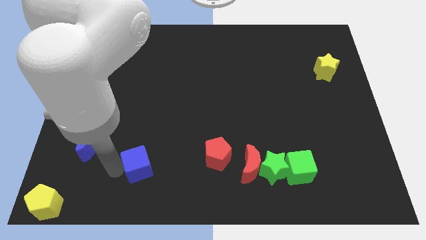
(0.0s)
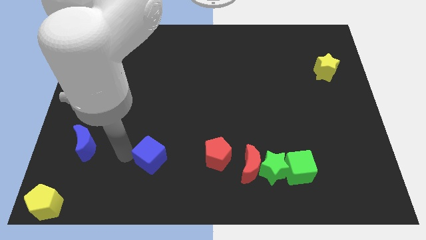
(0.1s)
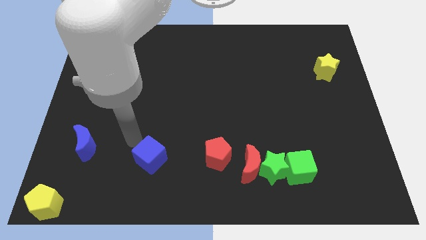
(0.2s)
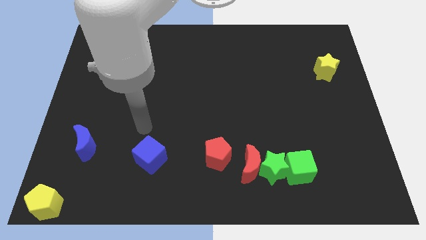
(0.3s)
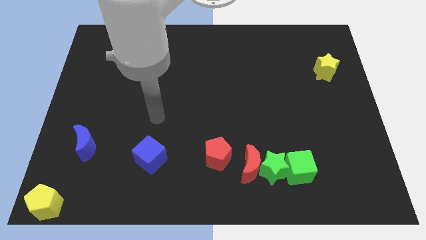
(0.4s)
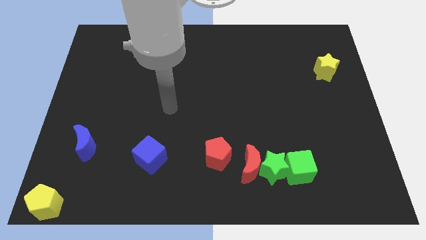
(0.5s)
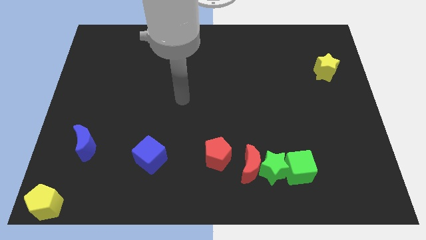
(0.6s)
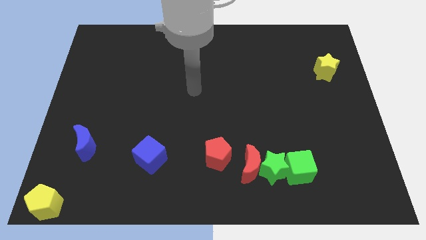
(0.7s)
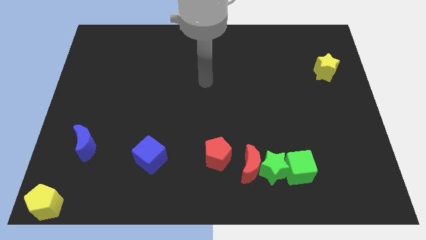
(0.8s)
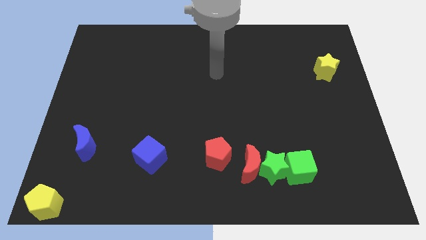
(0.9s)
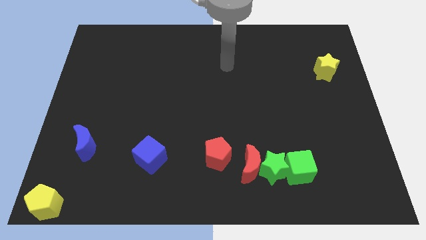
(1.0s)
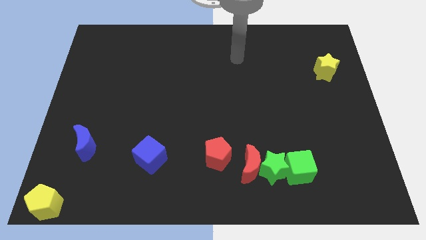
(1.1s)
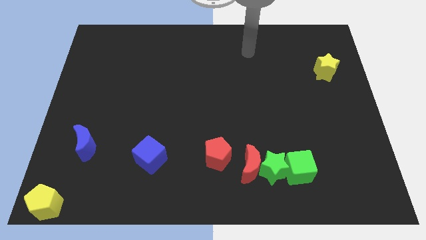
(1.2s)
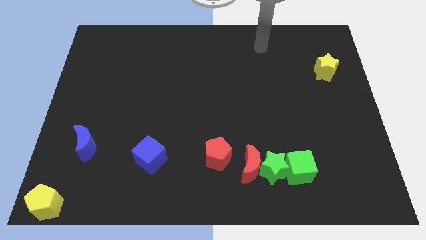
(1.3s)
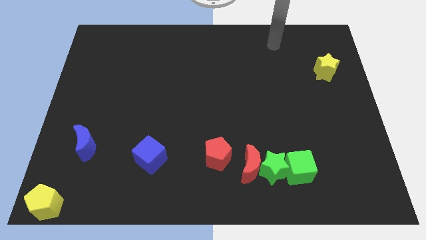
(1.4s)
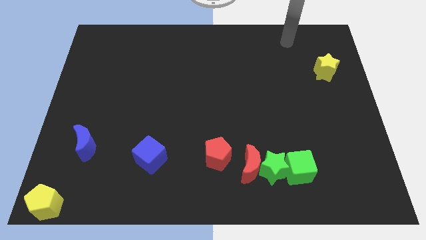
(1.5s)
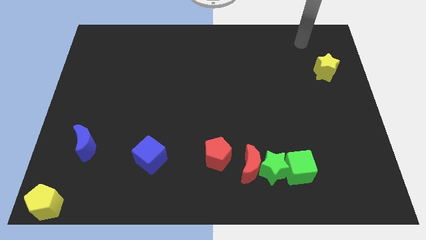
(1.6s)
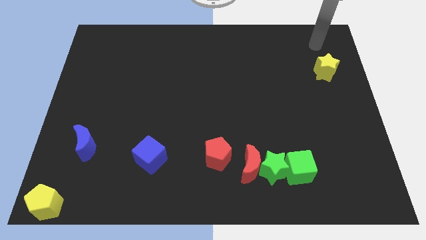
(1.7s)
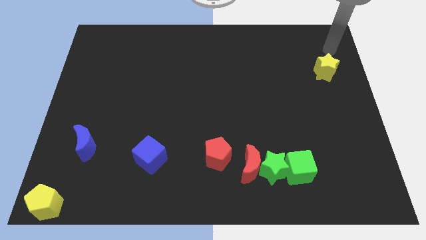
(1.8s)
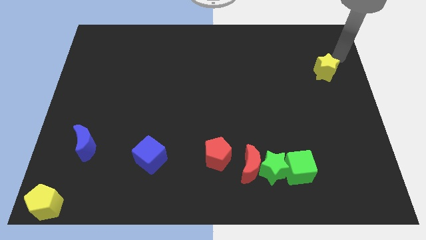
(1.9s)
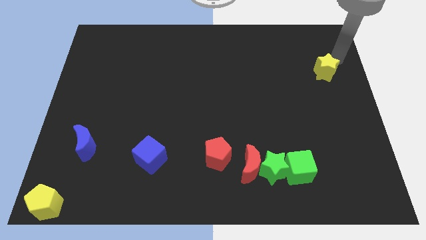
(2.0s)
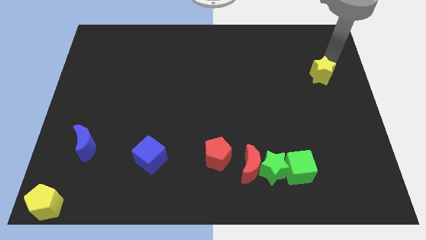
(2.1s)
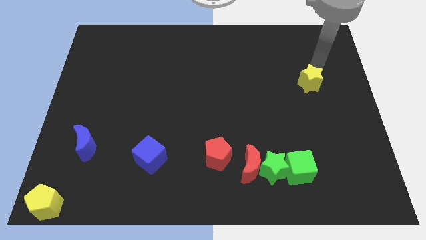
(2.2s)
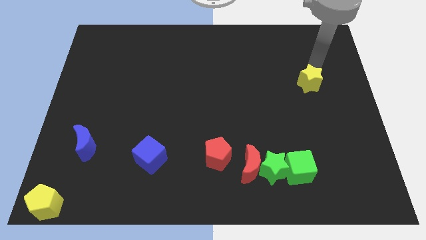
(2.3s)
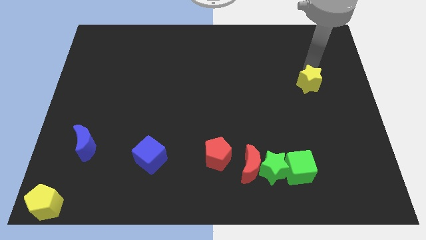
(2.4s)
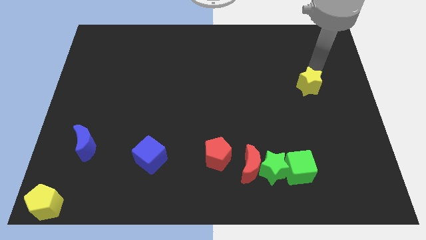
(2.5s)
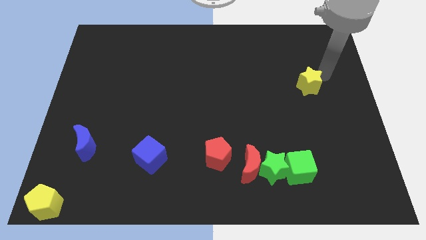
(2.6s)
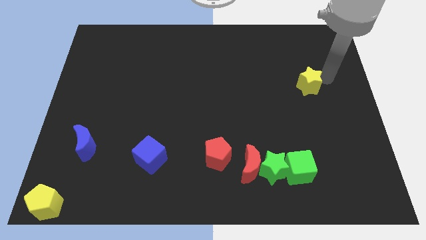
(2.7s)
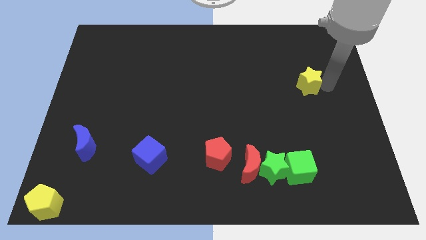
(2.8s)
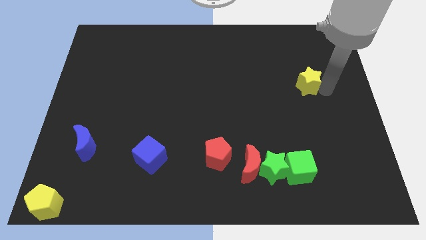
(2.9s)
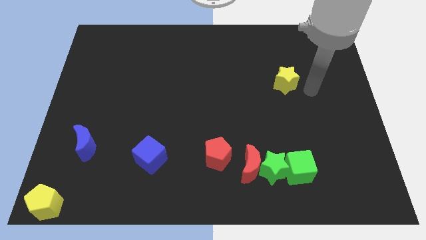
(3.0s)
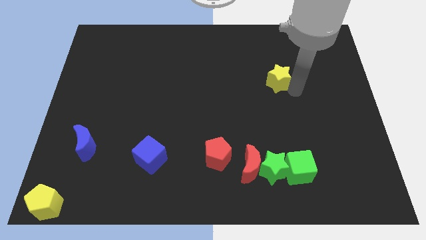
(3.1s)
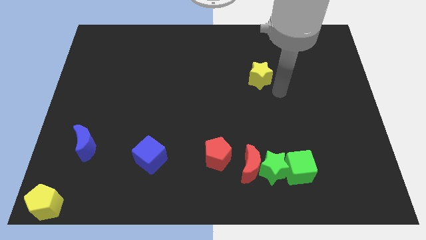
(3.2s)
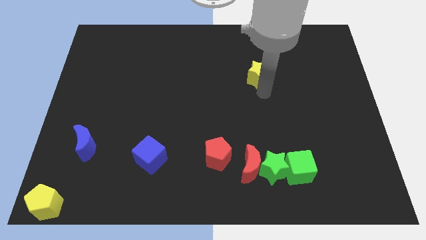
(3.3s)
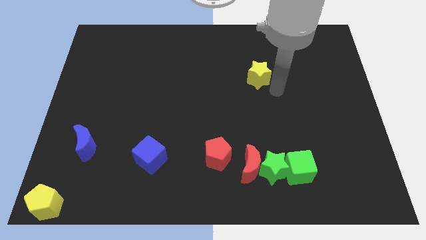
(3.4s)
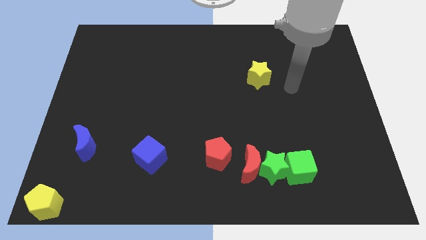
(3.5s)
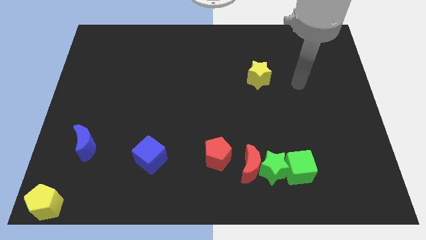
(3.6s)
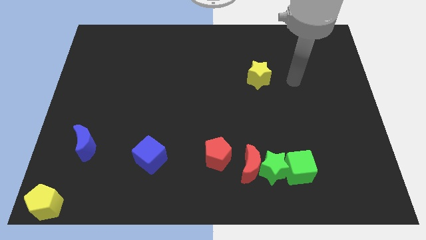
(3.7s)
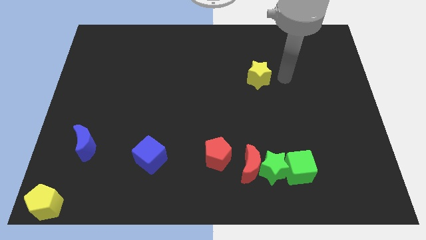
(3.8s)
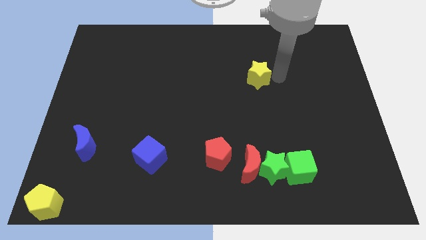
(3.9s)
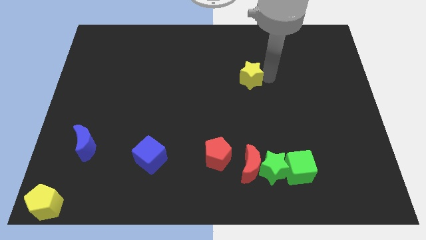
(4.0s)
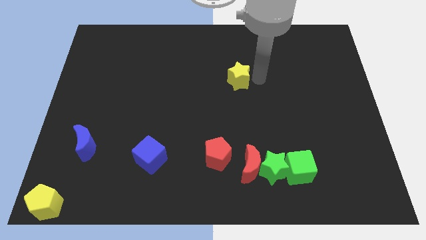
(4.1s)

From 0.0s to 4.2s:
put the yellow star above the red crescent

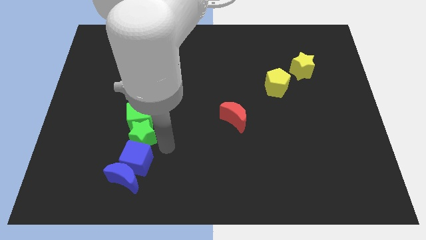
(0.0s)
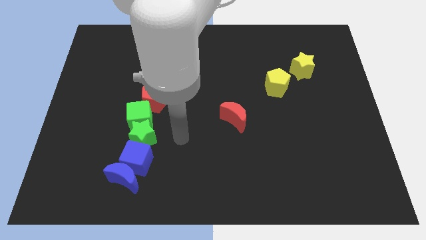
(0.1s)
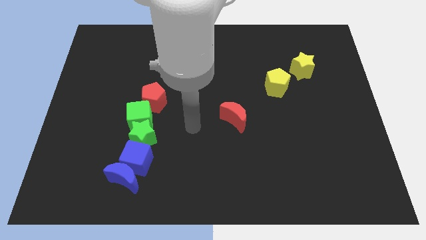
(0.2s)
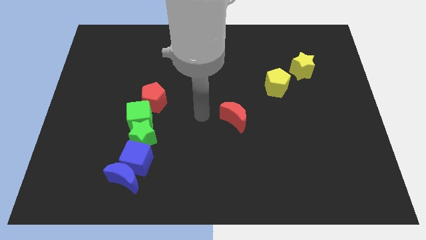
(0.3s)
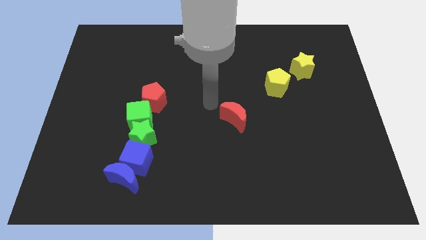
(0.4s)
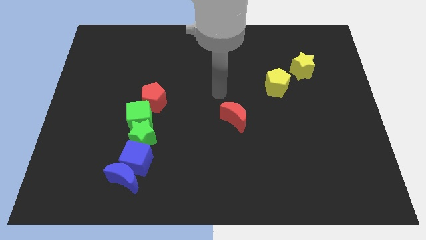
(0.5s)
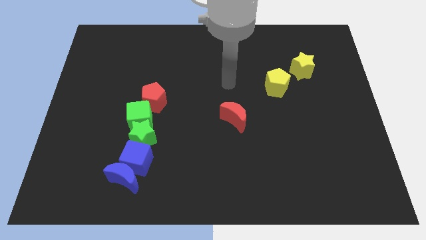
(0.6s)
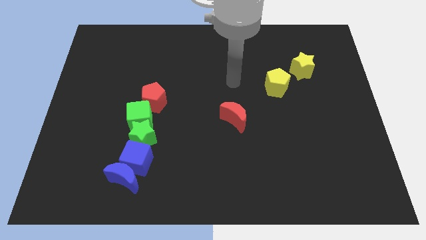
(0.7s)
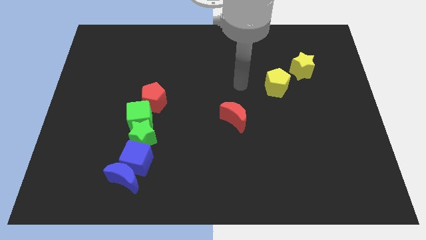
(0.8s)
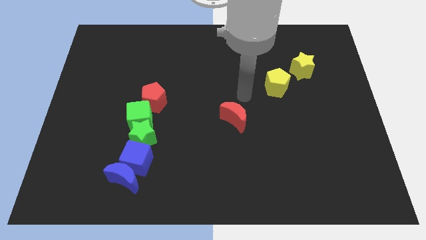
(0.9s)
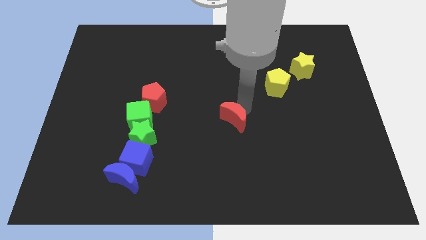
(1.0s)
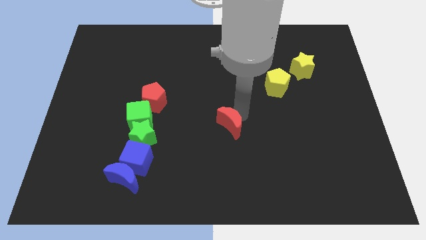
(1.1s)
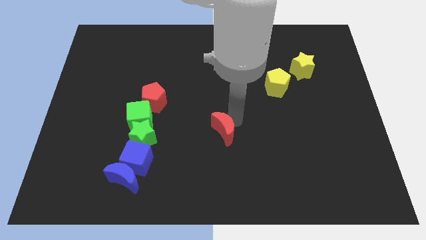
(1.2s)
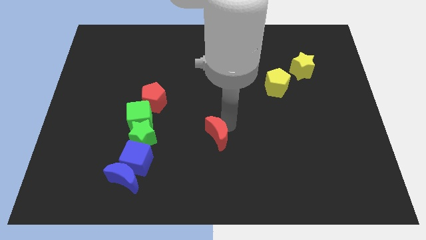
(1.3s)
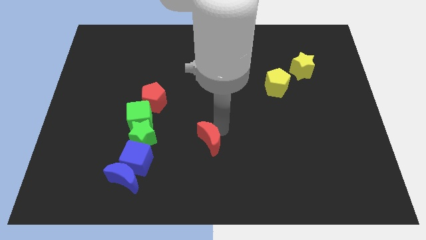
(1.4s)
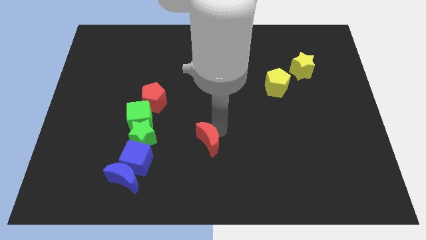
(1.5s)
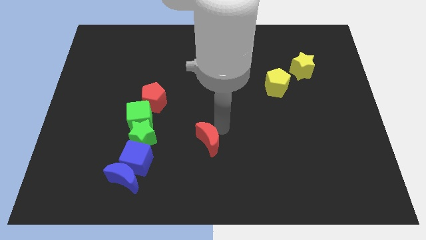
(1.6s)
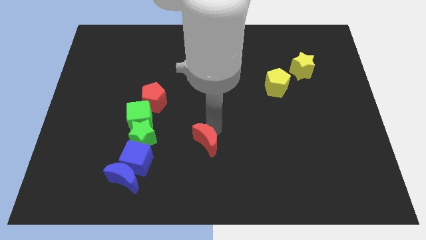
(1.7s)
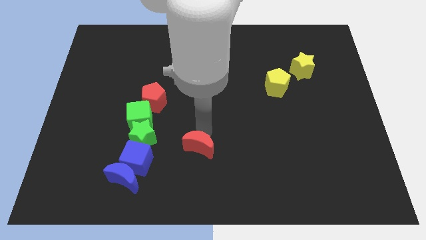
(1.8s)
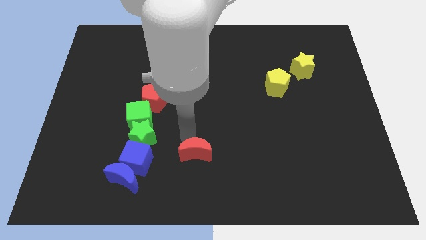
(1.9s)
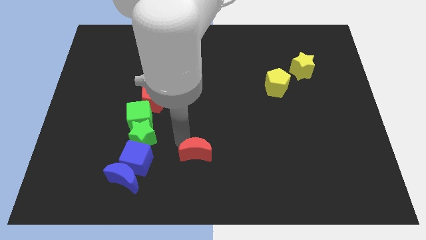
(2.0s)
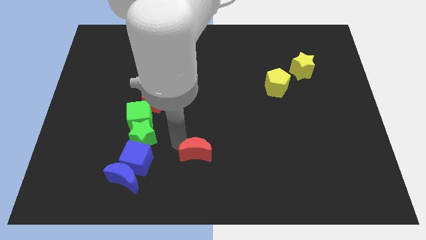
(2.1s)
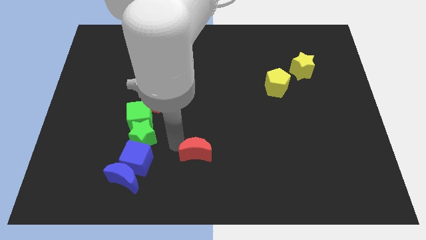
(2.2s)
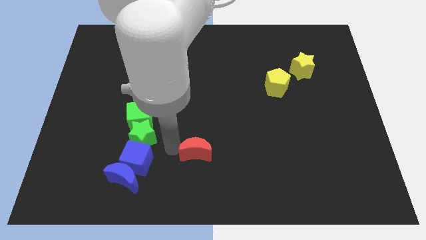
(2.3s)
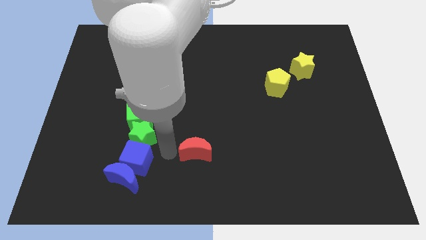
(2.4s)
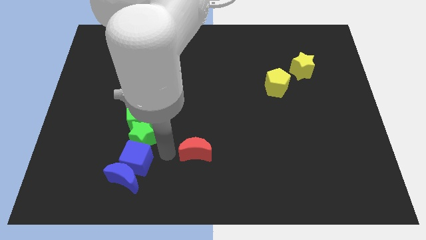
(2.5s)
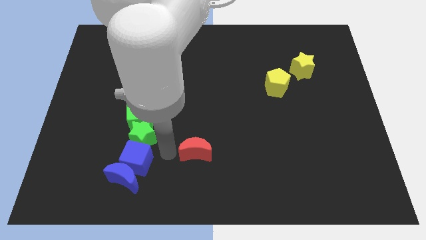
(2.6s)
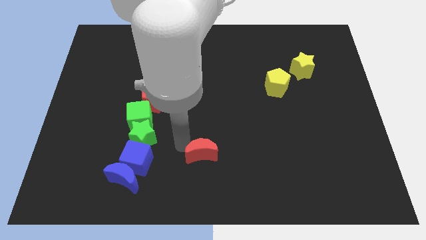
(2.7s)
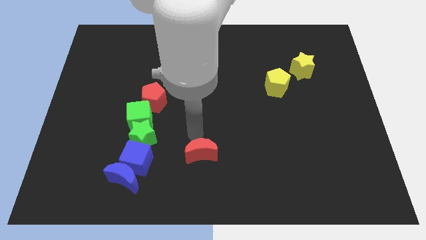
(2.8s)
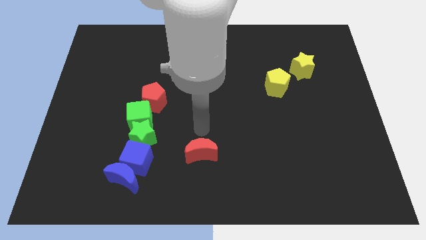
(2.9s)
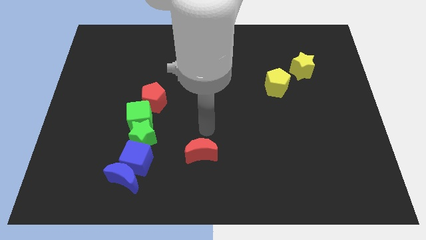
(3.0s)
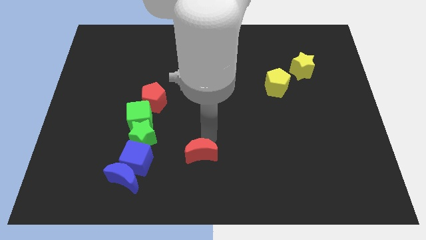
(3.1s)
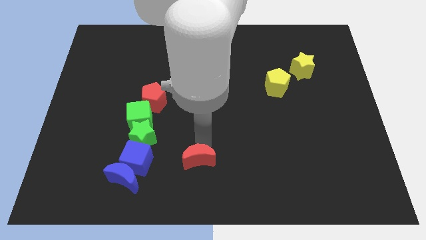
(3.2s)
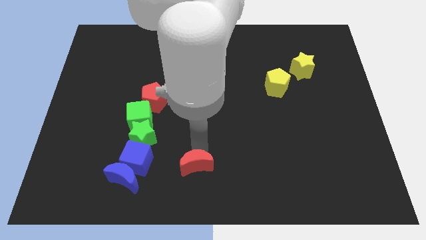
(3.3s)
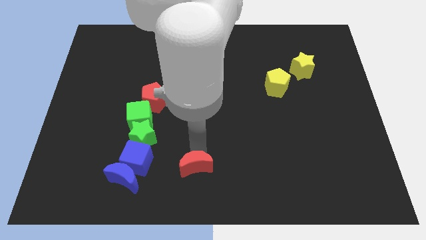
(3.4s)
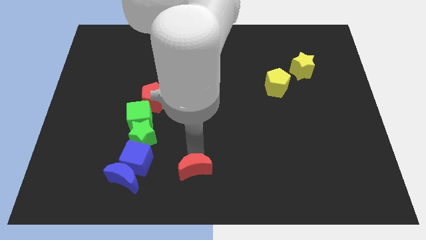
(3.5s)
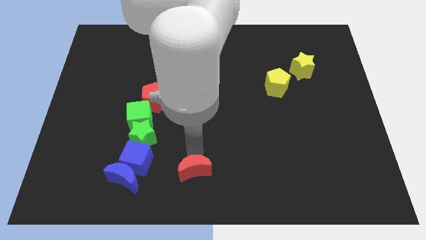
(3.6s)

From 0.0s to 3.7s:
move the red moon towards the bottom center

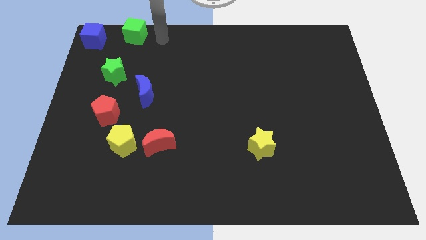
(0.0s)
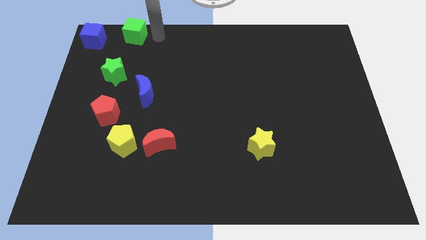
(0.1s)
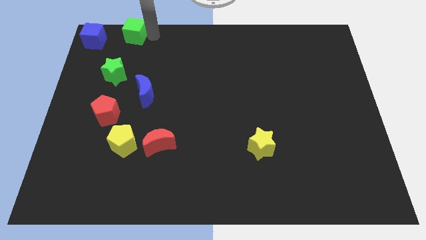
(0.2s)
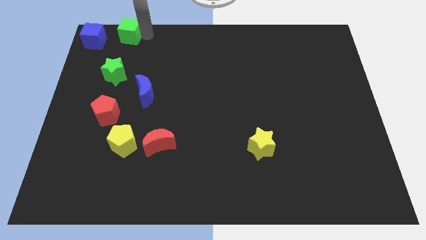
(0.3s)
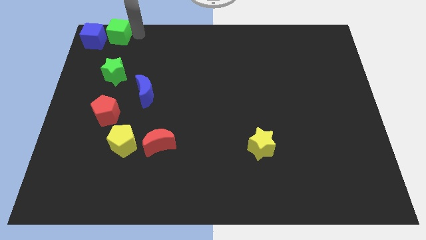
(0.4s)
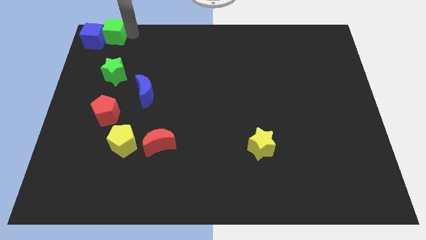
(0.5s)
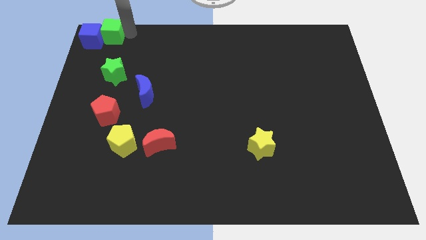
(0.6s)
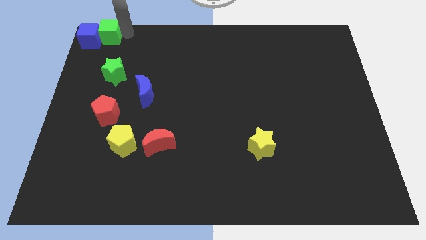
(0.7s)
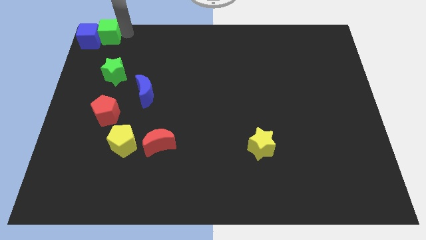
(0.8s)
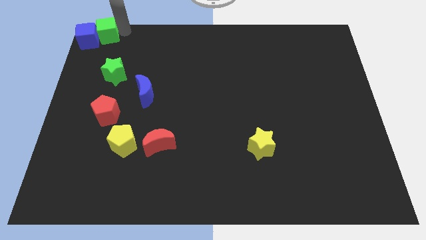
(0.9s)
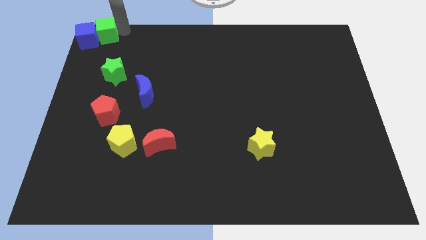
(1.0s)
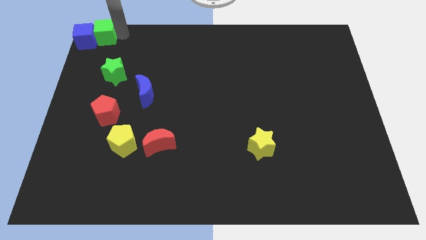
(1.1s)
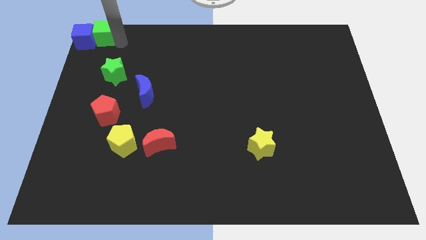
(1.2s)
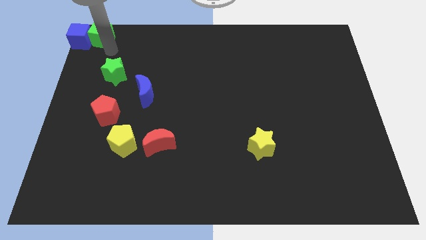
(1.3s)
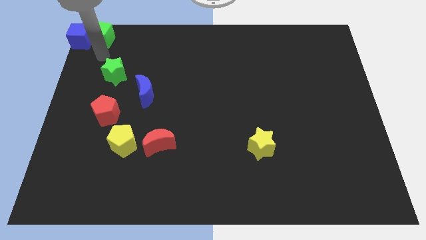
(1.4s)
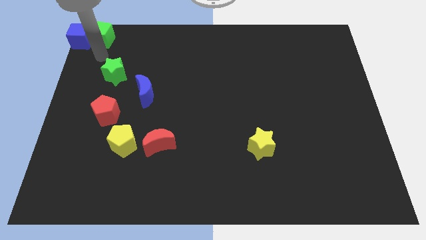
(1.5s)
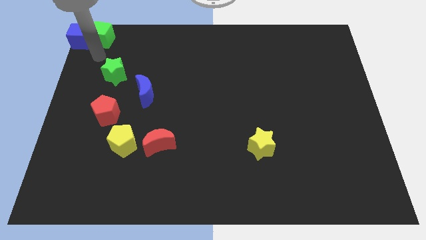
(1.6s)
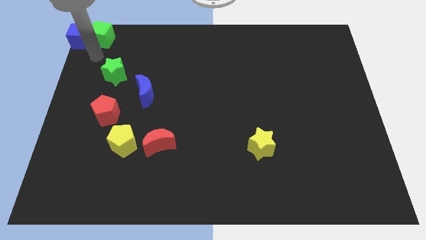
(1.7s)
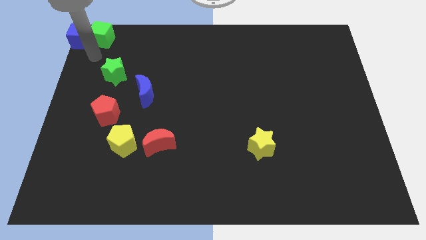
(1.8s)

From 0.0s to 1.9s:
slide the green cube into the blue cube
